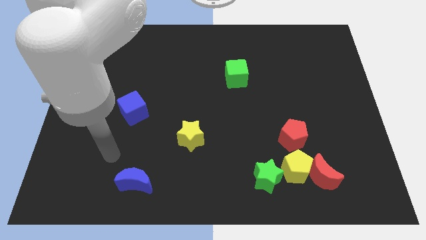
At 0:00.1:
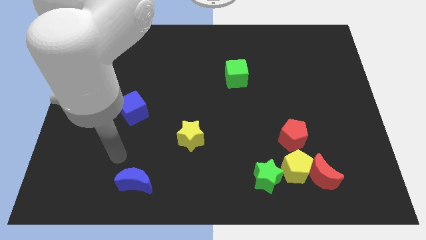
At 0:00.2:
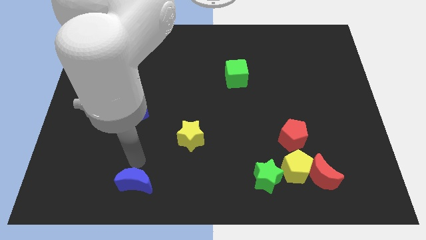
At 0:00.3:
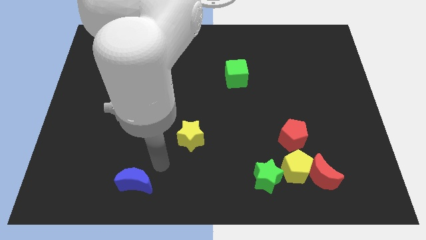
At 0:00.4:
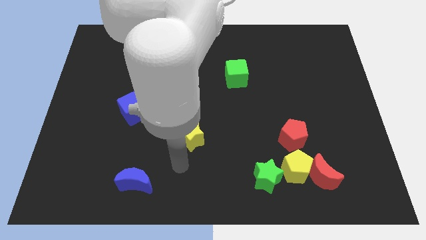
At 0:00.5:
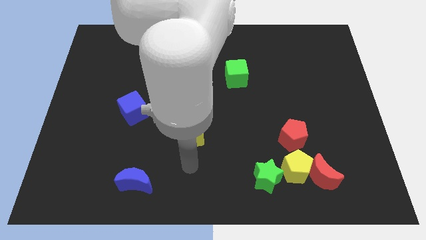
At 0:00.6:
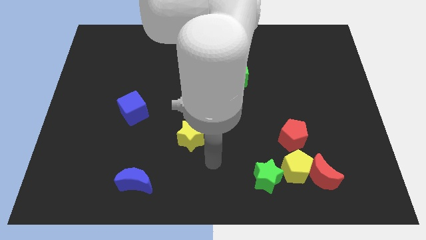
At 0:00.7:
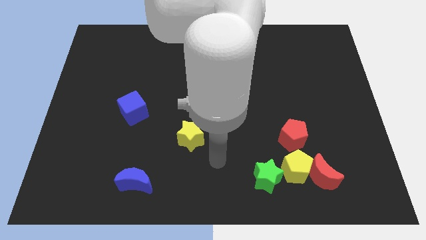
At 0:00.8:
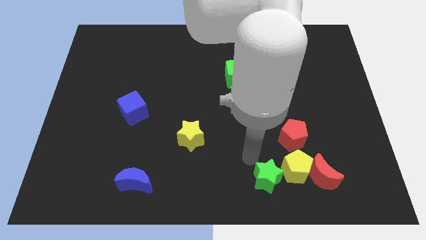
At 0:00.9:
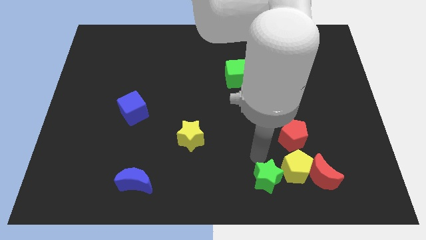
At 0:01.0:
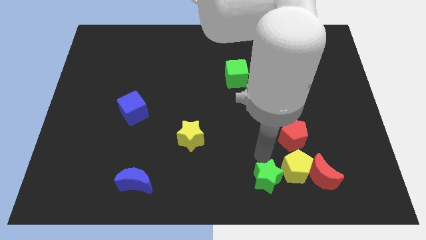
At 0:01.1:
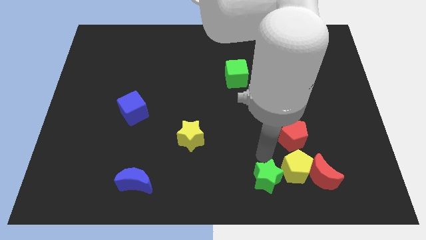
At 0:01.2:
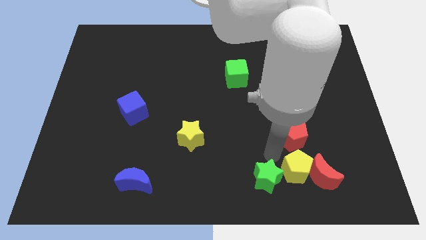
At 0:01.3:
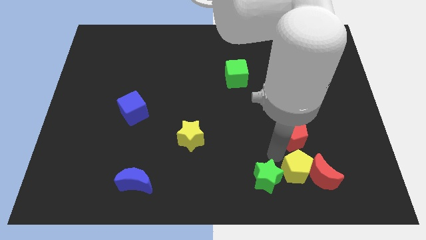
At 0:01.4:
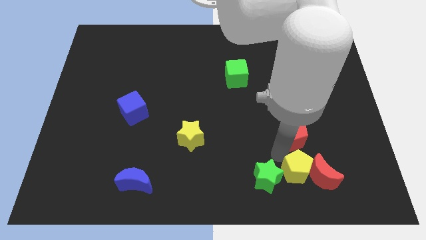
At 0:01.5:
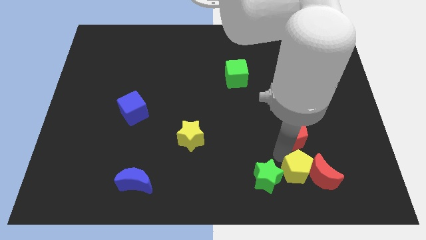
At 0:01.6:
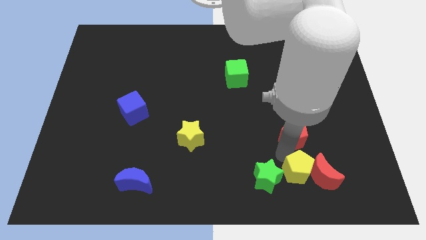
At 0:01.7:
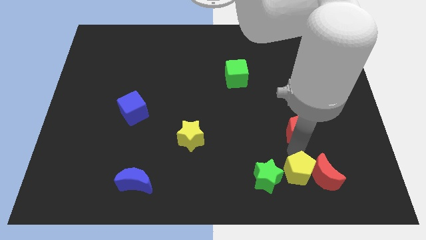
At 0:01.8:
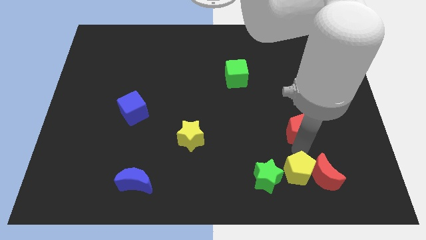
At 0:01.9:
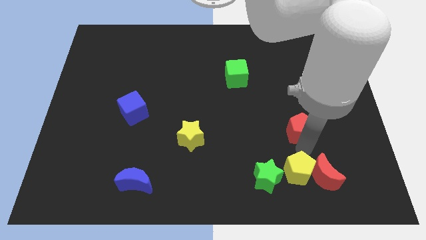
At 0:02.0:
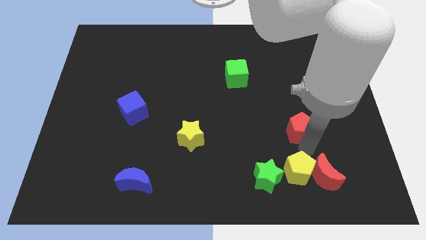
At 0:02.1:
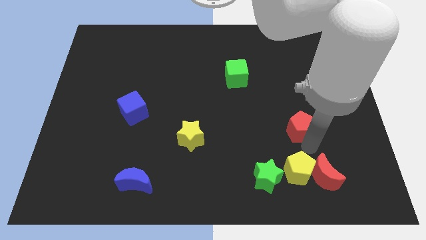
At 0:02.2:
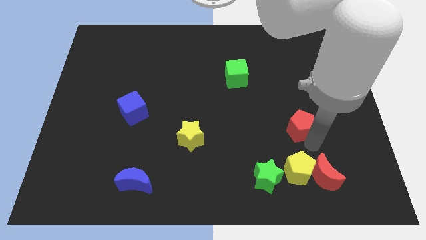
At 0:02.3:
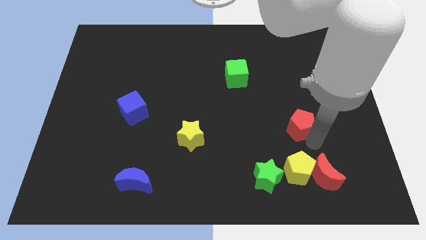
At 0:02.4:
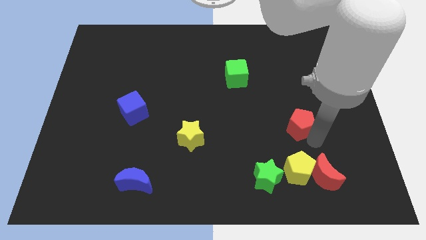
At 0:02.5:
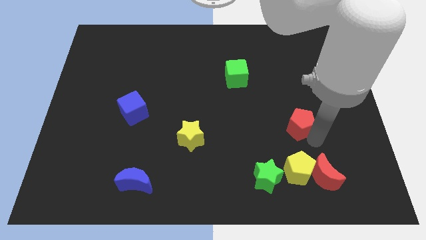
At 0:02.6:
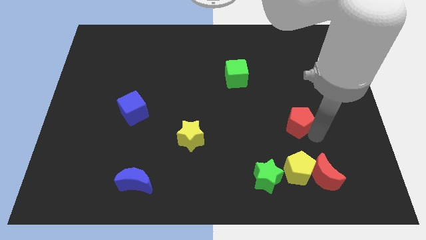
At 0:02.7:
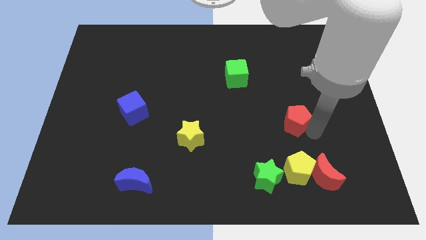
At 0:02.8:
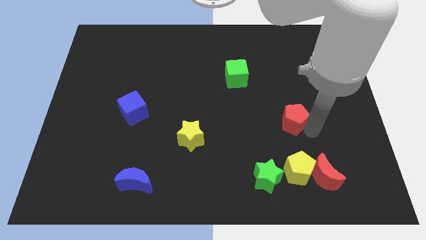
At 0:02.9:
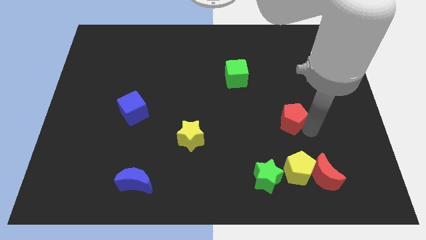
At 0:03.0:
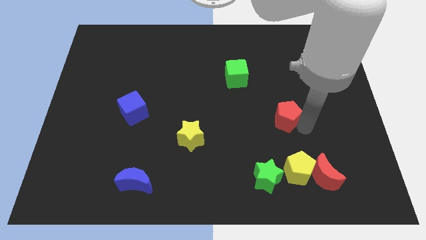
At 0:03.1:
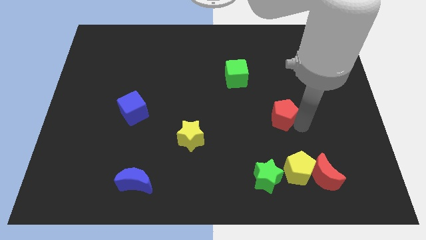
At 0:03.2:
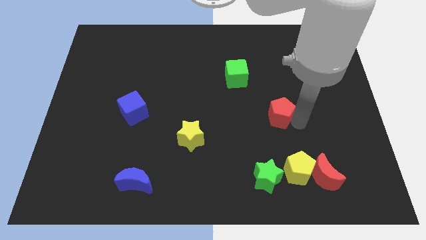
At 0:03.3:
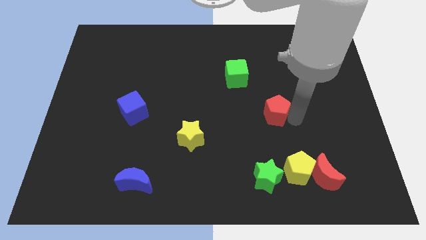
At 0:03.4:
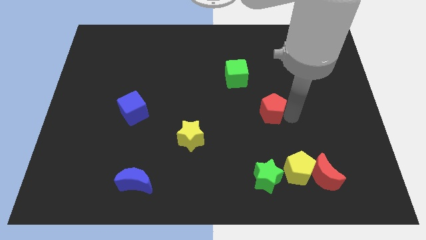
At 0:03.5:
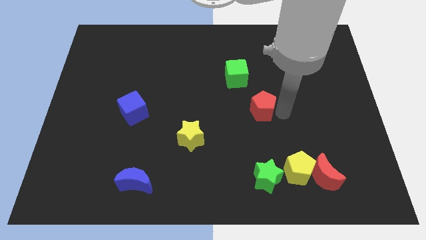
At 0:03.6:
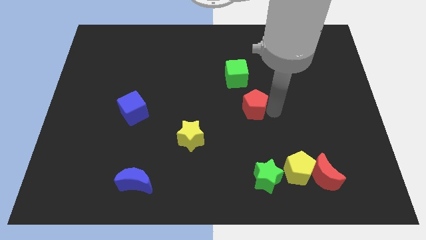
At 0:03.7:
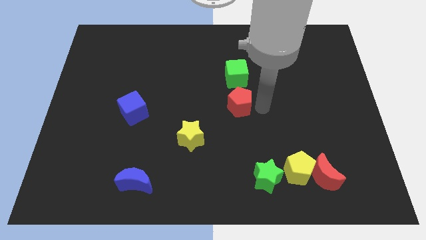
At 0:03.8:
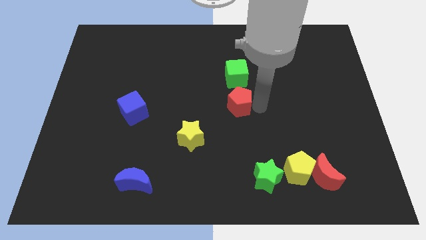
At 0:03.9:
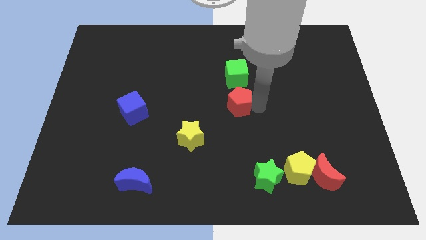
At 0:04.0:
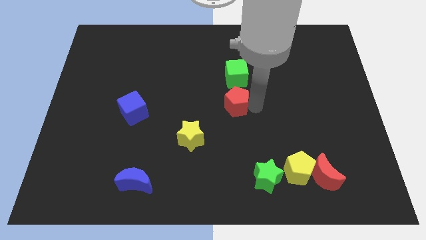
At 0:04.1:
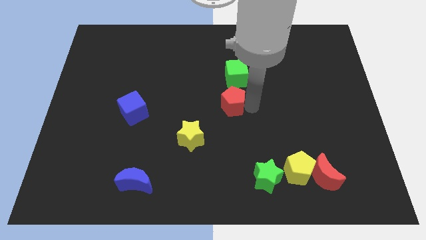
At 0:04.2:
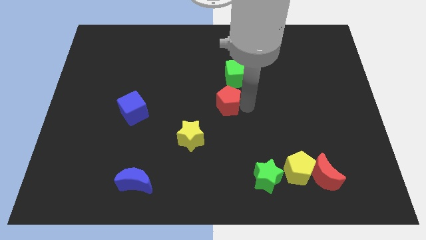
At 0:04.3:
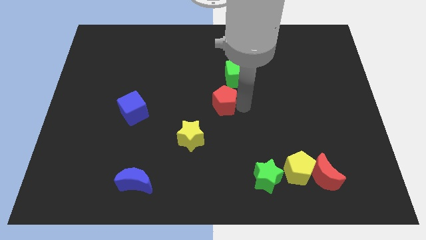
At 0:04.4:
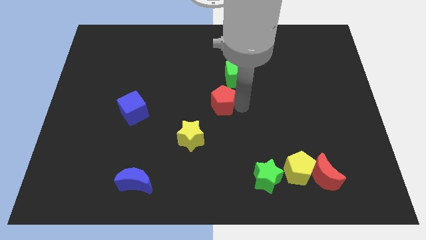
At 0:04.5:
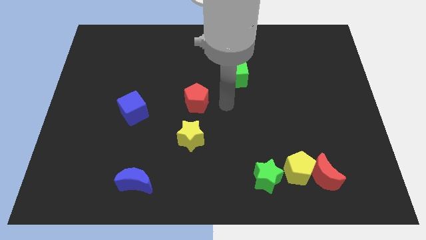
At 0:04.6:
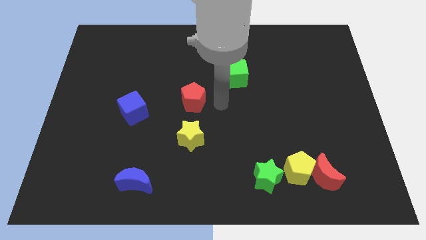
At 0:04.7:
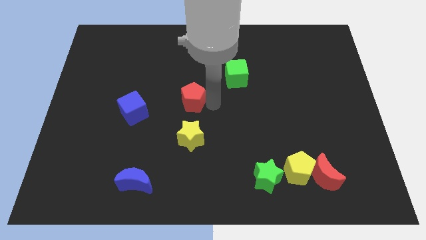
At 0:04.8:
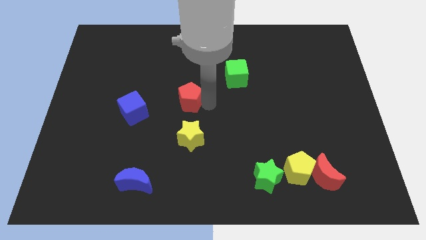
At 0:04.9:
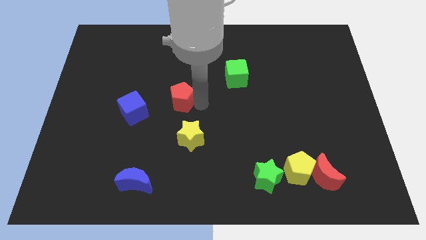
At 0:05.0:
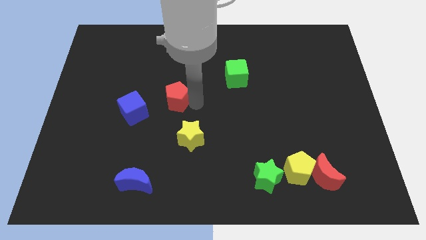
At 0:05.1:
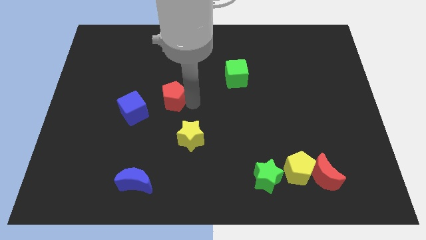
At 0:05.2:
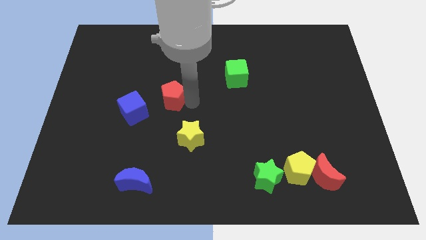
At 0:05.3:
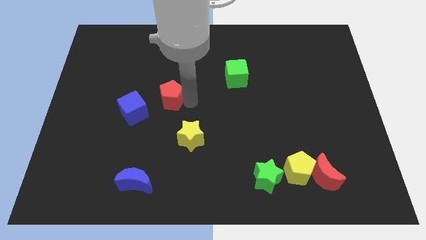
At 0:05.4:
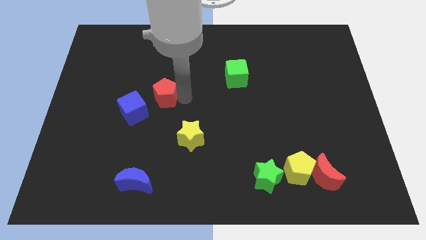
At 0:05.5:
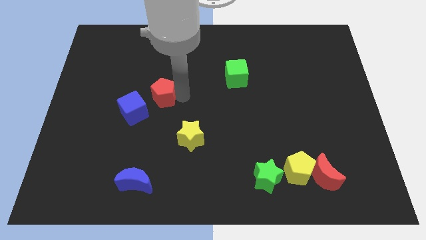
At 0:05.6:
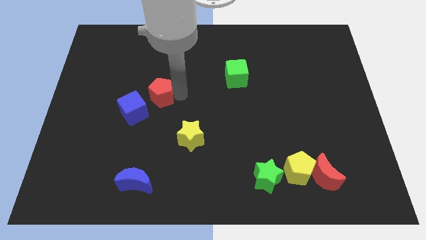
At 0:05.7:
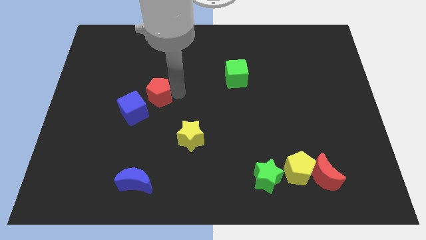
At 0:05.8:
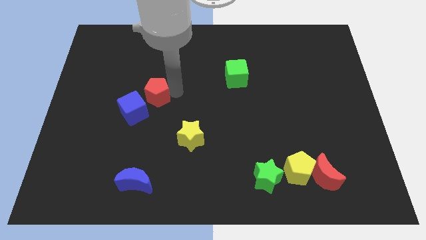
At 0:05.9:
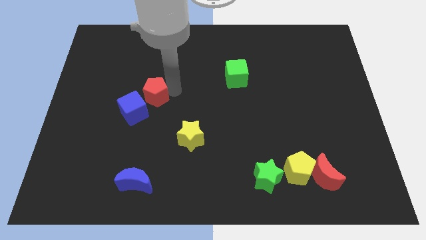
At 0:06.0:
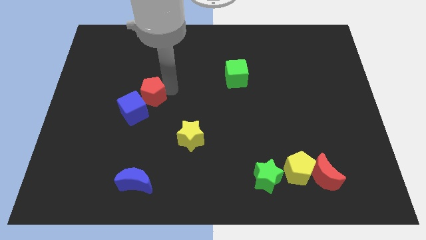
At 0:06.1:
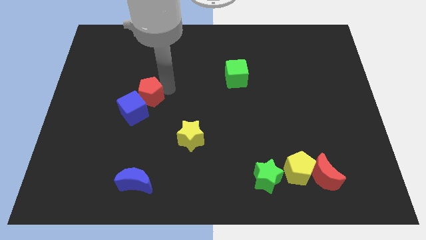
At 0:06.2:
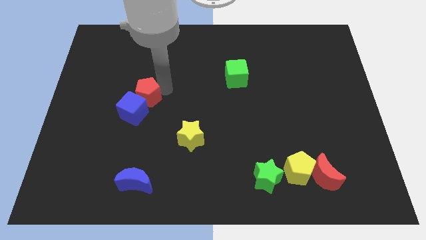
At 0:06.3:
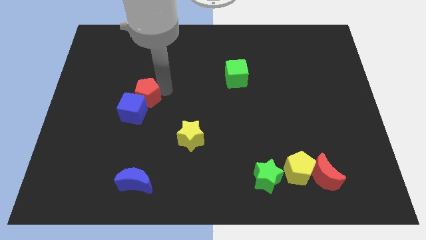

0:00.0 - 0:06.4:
push the red pentagon to the blue cube

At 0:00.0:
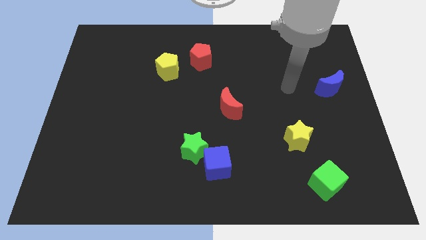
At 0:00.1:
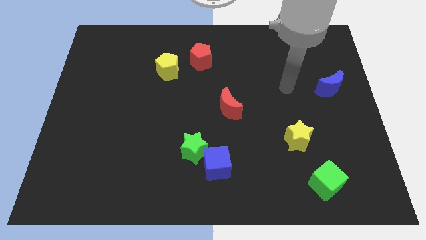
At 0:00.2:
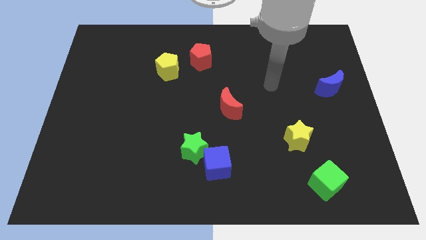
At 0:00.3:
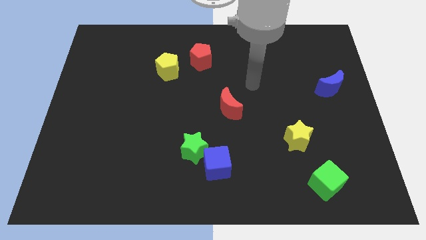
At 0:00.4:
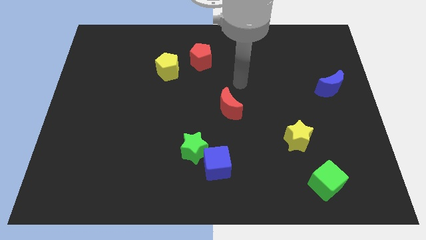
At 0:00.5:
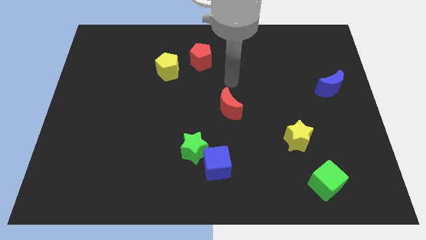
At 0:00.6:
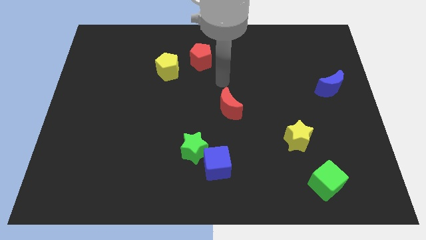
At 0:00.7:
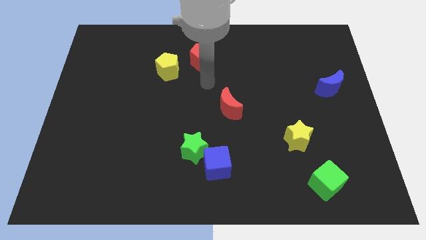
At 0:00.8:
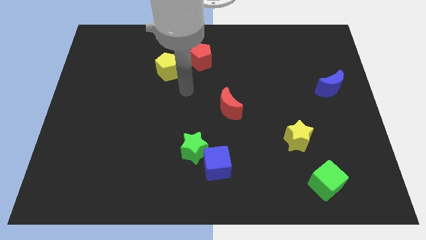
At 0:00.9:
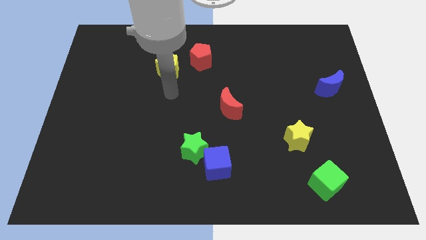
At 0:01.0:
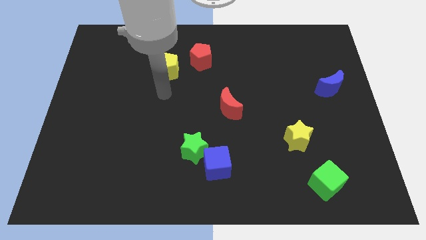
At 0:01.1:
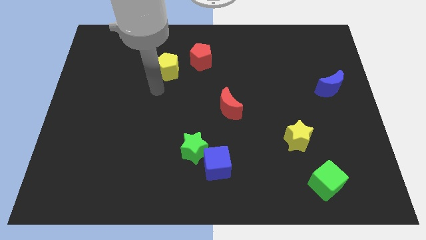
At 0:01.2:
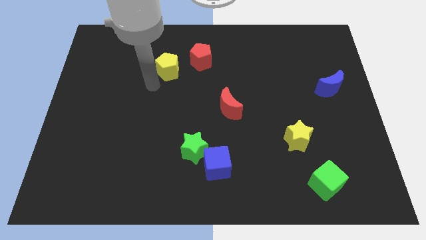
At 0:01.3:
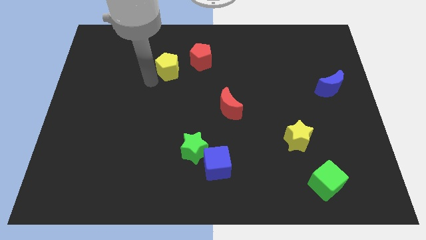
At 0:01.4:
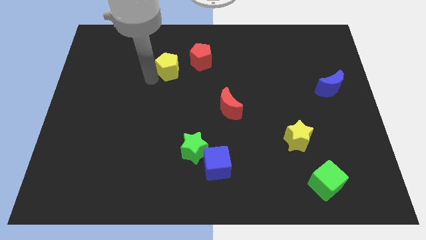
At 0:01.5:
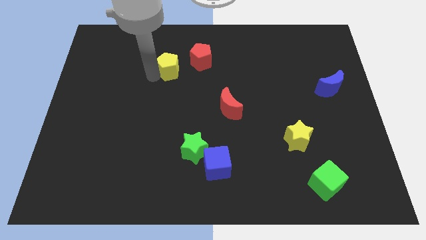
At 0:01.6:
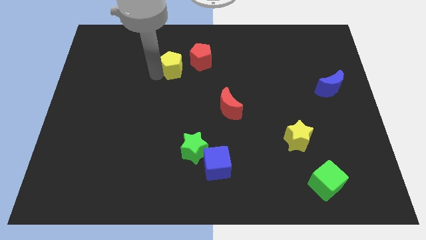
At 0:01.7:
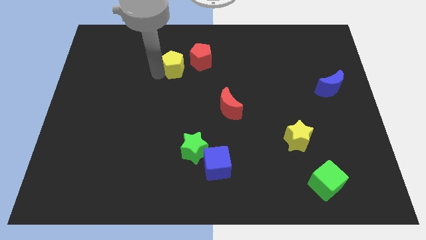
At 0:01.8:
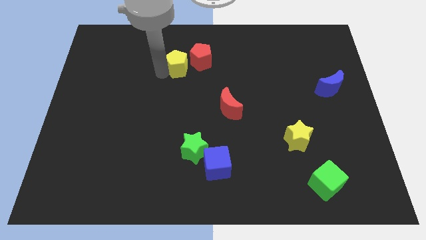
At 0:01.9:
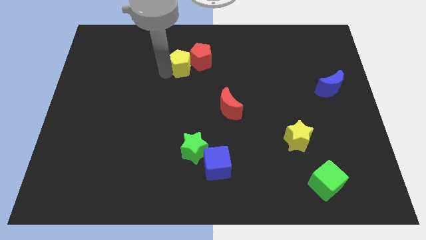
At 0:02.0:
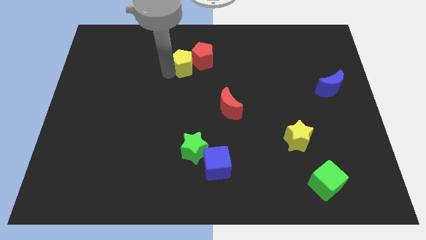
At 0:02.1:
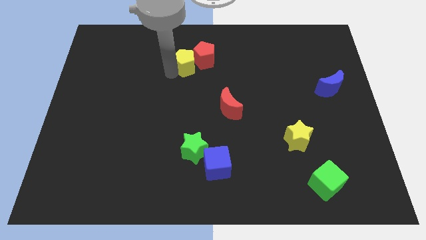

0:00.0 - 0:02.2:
push the yellow pentagon close to the red pentagon
